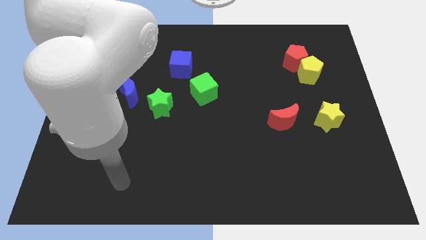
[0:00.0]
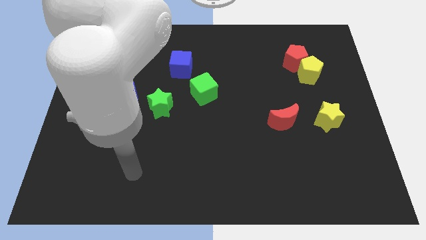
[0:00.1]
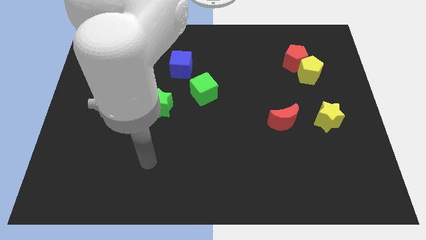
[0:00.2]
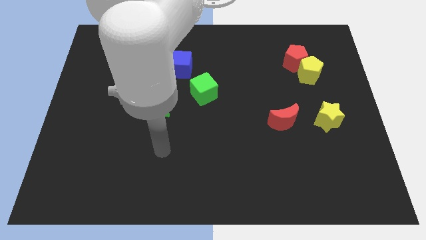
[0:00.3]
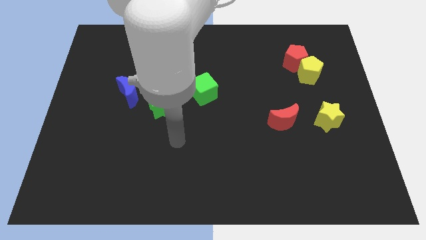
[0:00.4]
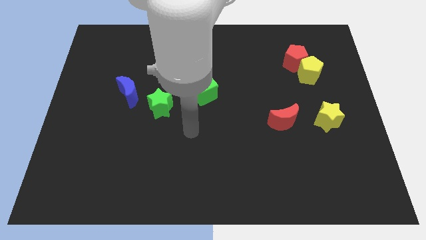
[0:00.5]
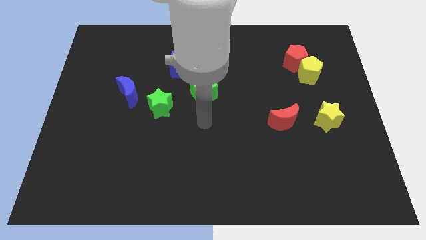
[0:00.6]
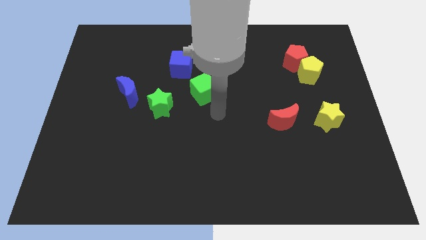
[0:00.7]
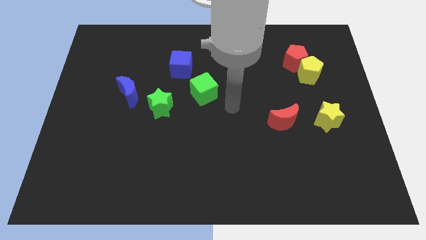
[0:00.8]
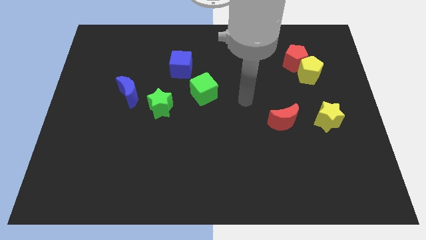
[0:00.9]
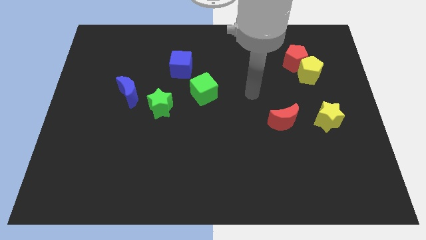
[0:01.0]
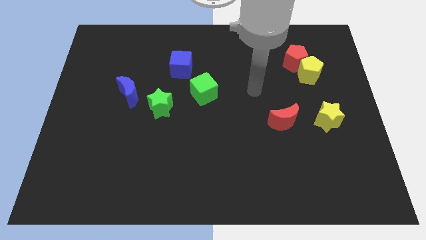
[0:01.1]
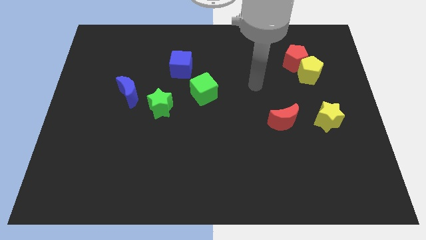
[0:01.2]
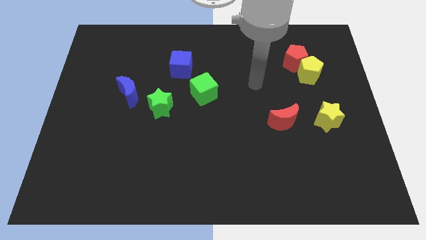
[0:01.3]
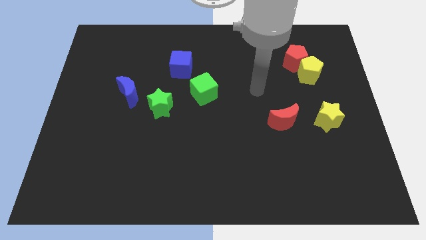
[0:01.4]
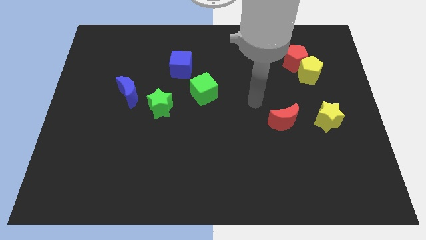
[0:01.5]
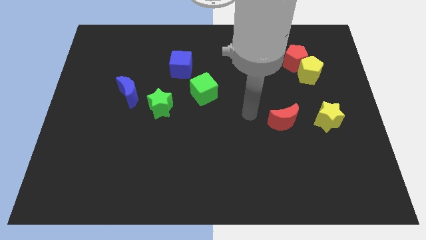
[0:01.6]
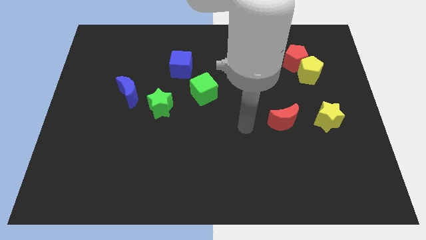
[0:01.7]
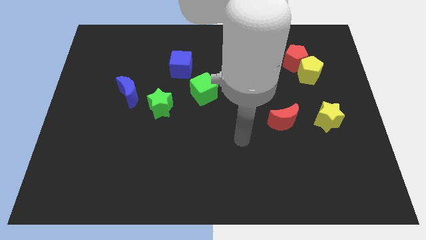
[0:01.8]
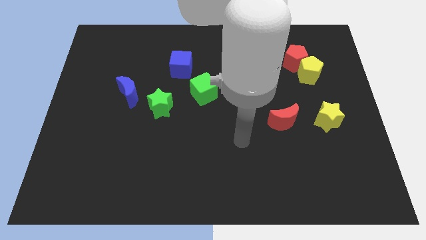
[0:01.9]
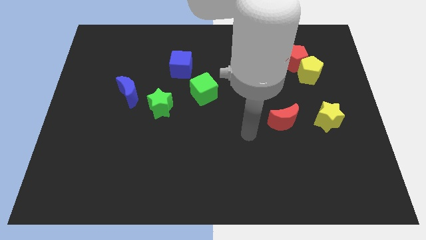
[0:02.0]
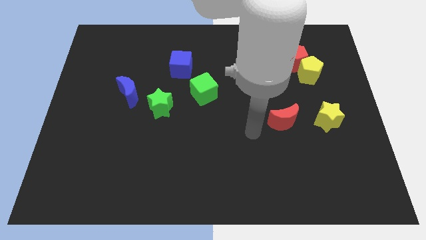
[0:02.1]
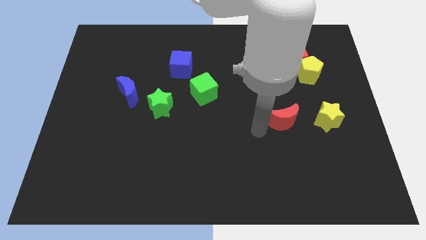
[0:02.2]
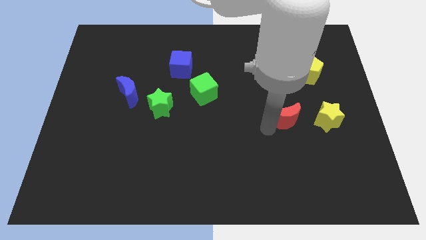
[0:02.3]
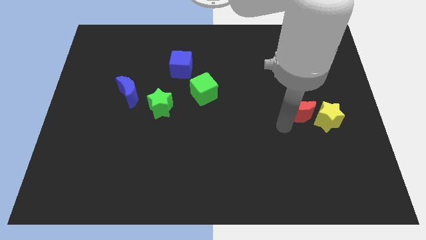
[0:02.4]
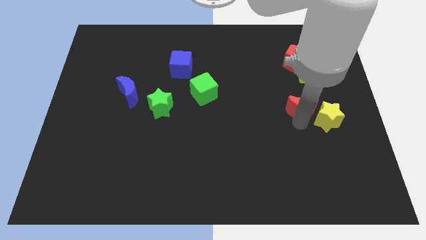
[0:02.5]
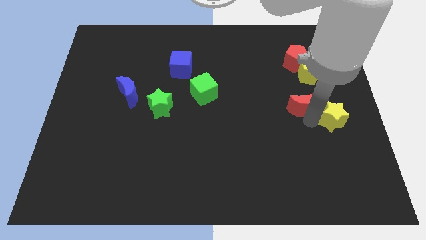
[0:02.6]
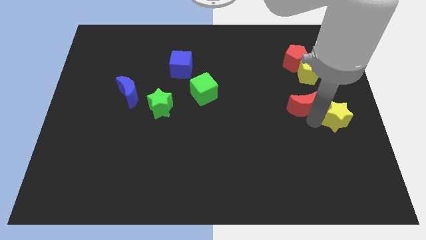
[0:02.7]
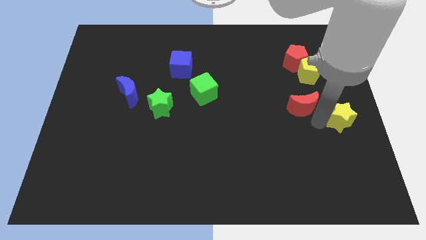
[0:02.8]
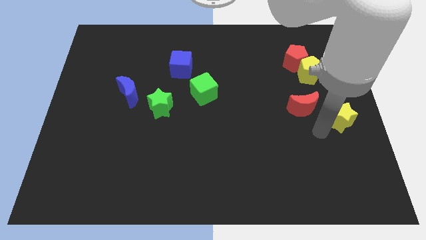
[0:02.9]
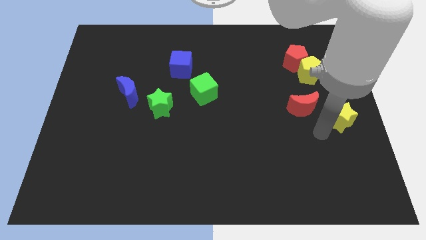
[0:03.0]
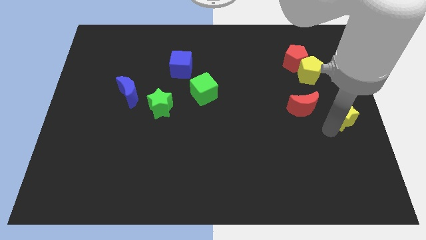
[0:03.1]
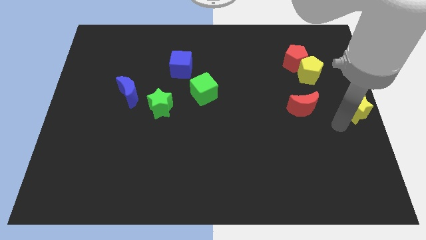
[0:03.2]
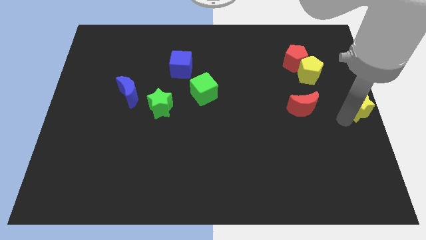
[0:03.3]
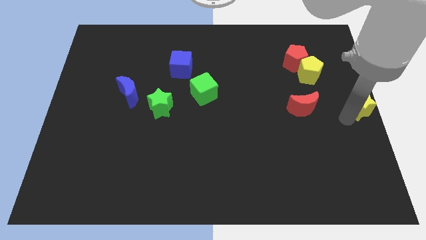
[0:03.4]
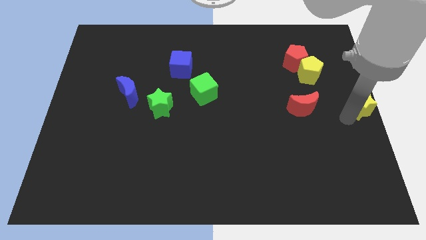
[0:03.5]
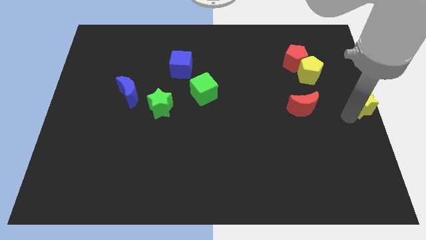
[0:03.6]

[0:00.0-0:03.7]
place the yellow star to the center right side of the board

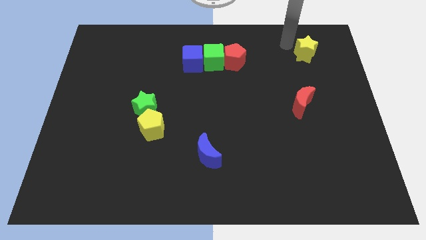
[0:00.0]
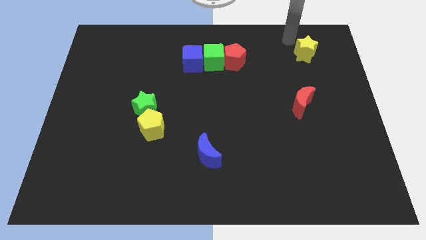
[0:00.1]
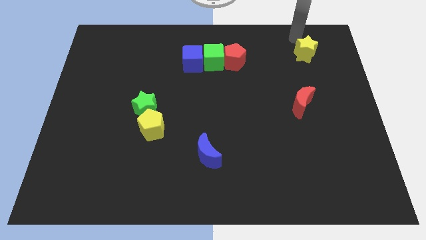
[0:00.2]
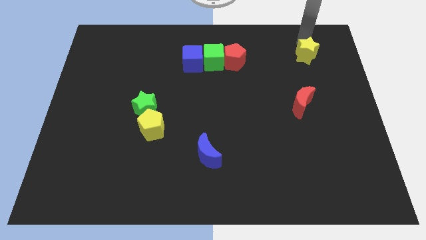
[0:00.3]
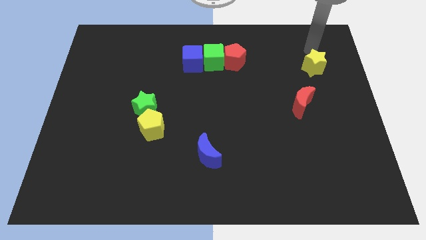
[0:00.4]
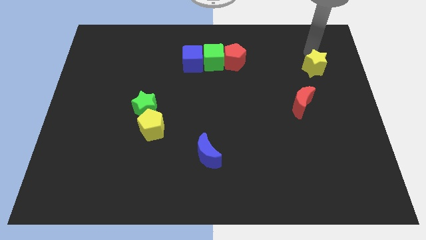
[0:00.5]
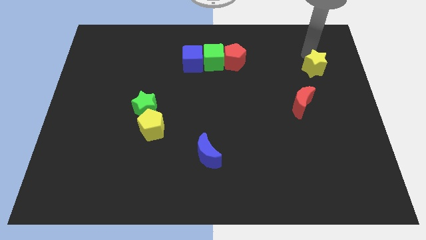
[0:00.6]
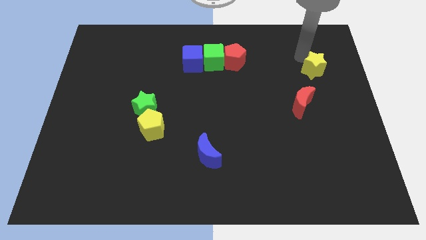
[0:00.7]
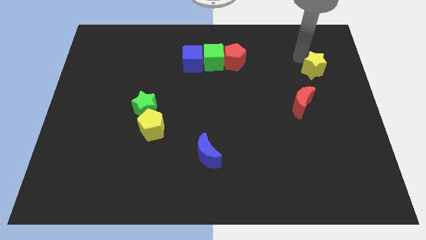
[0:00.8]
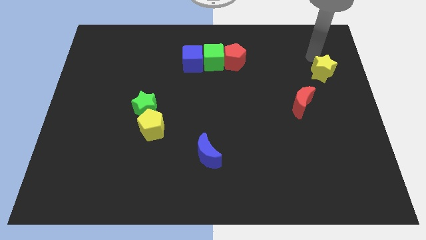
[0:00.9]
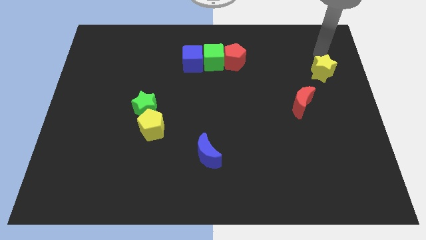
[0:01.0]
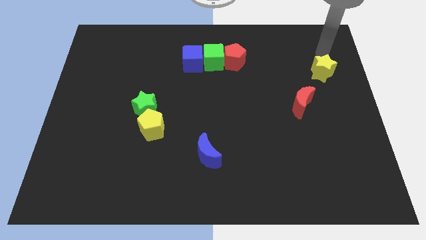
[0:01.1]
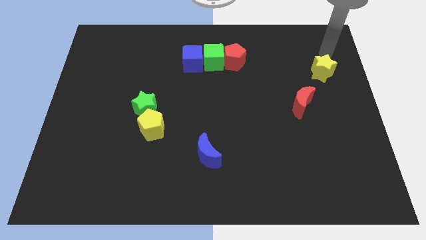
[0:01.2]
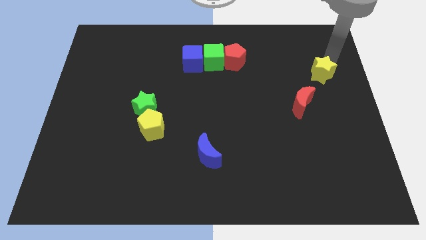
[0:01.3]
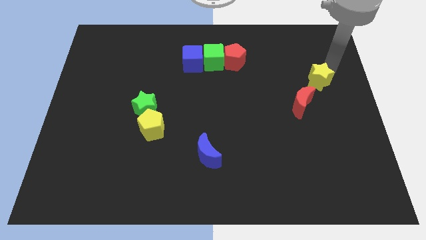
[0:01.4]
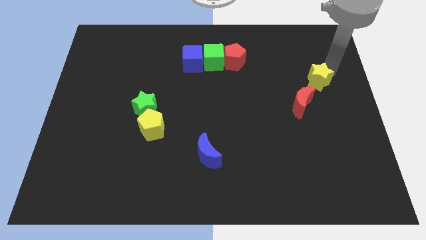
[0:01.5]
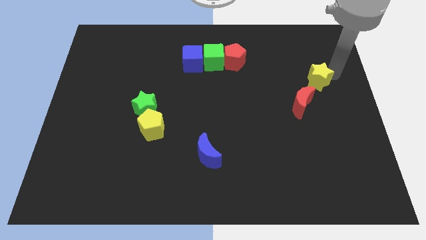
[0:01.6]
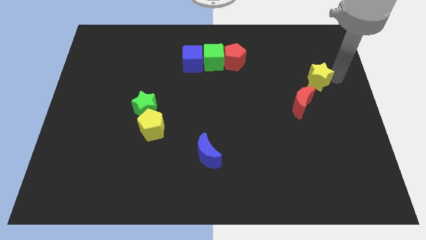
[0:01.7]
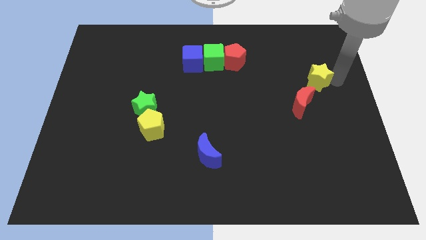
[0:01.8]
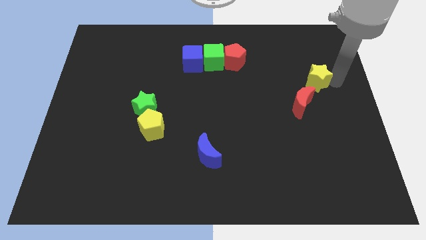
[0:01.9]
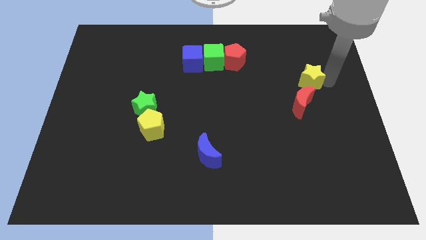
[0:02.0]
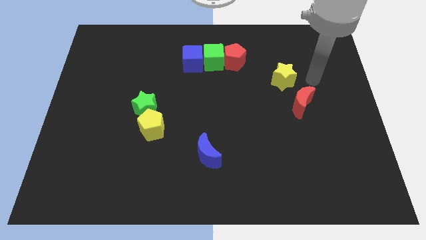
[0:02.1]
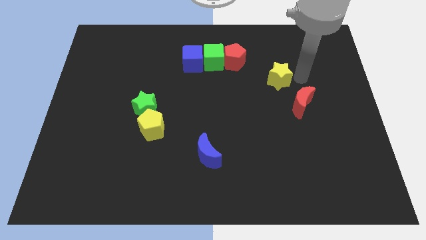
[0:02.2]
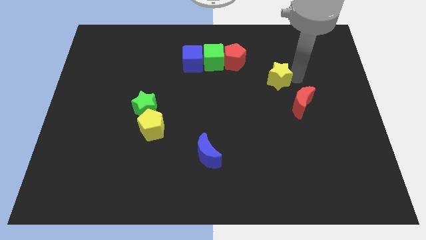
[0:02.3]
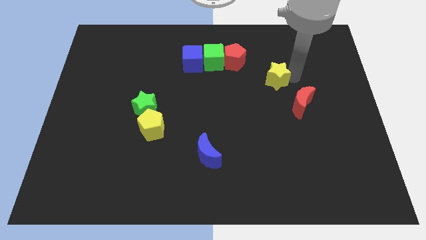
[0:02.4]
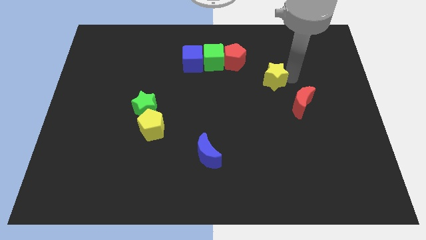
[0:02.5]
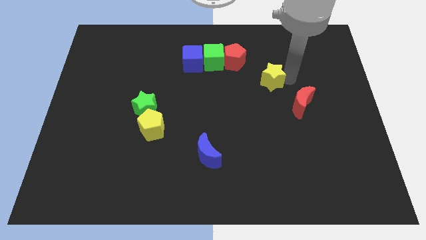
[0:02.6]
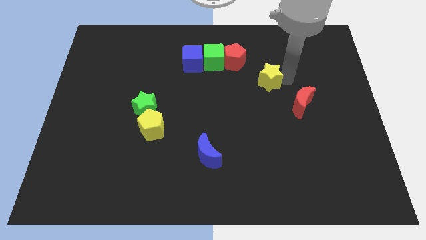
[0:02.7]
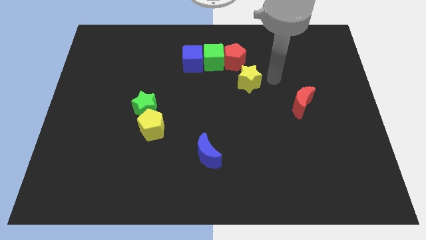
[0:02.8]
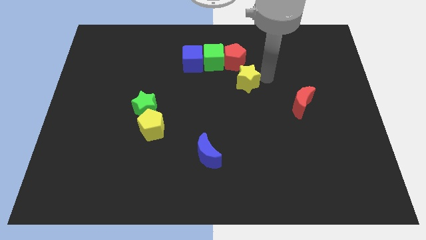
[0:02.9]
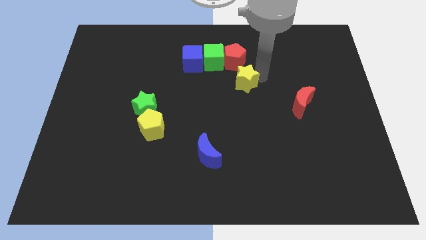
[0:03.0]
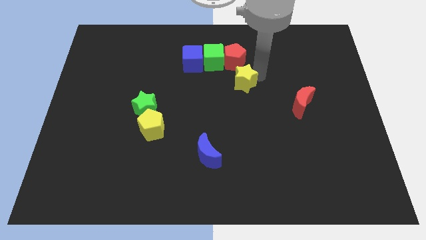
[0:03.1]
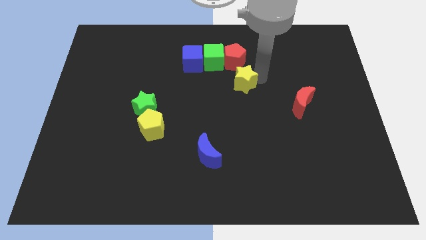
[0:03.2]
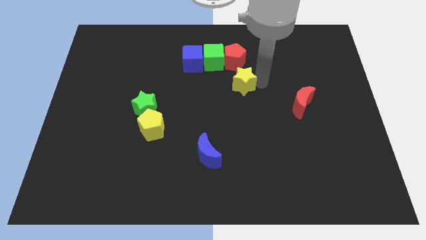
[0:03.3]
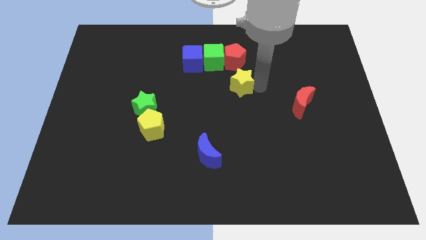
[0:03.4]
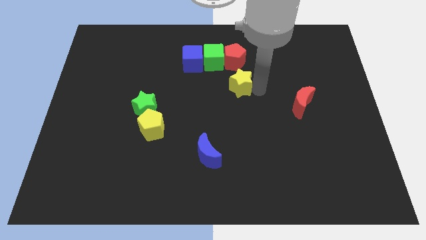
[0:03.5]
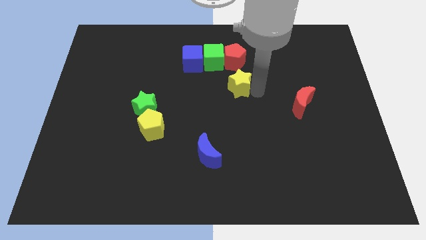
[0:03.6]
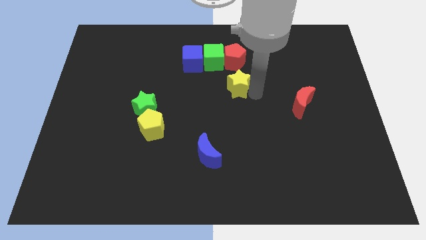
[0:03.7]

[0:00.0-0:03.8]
place the yellow star below the red pentagon

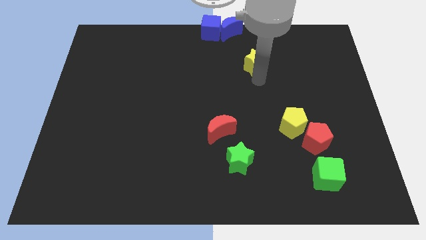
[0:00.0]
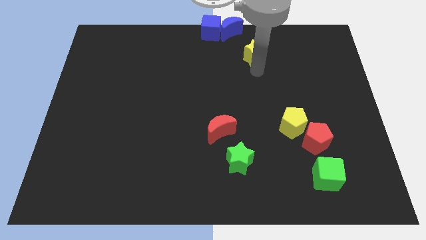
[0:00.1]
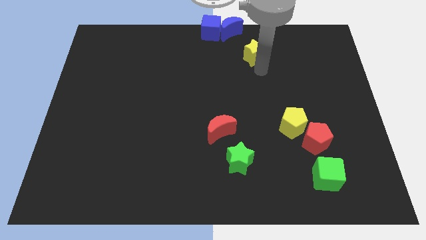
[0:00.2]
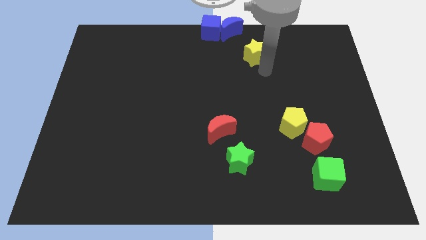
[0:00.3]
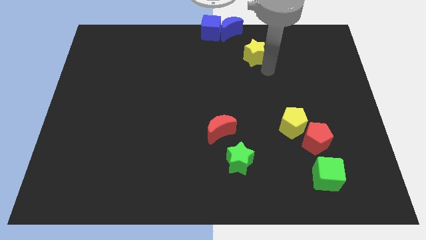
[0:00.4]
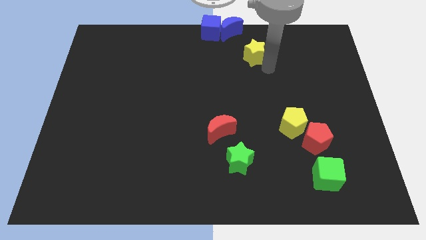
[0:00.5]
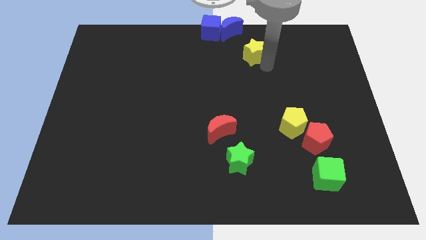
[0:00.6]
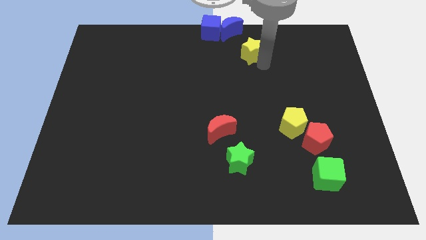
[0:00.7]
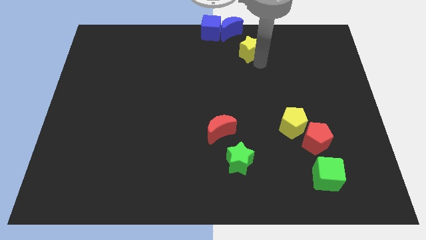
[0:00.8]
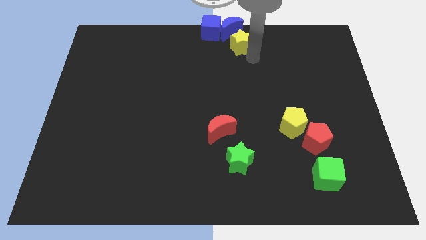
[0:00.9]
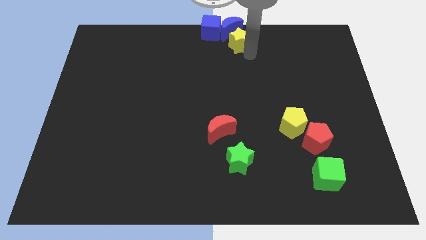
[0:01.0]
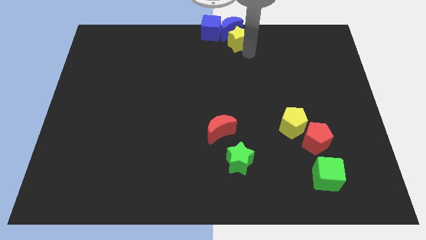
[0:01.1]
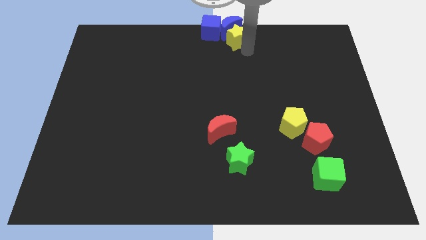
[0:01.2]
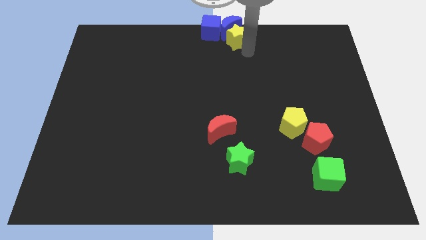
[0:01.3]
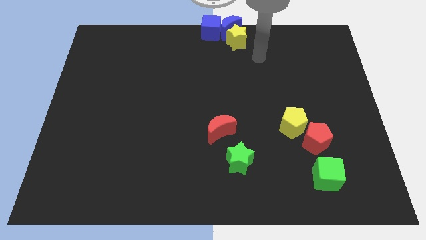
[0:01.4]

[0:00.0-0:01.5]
push the yellow star into the bottom of blue crescent
